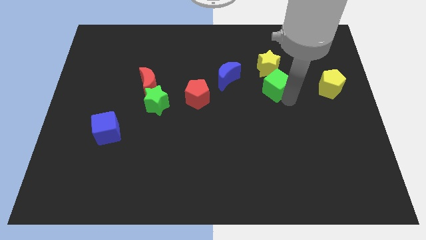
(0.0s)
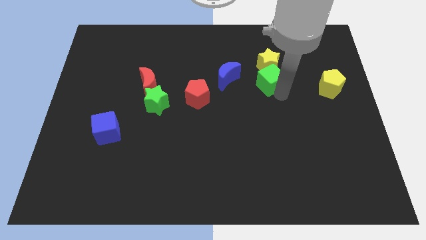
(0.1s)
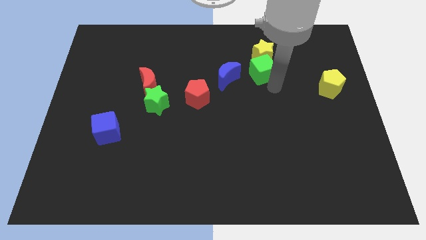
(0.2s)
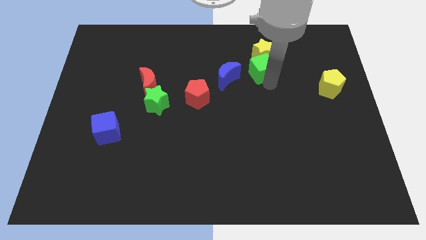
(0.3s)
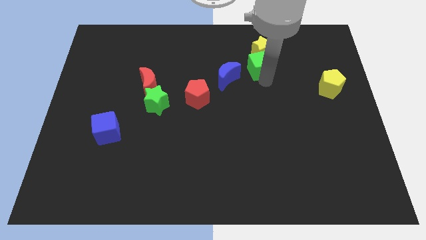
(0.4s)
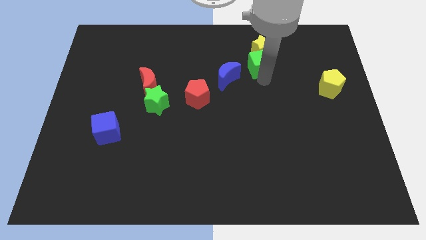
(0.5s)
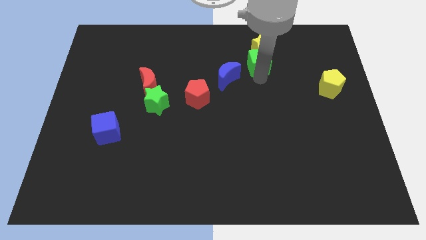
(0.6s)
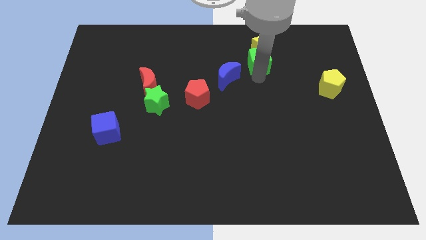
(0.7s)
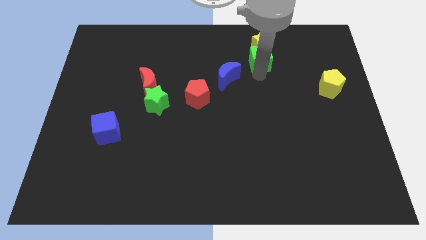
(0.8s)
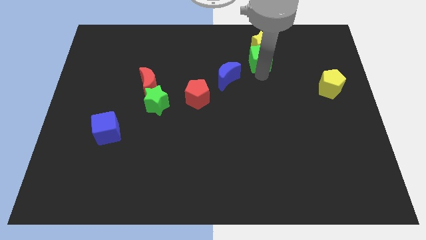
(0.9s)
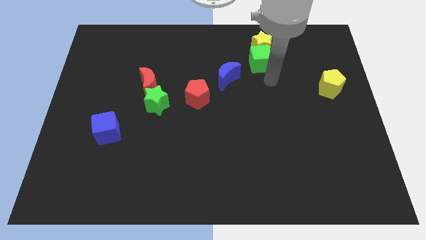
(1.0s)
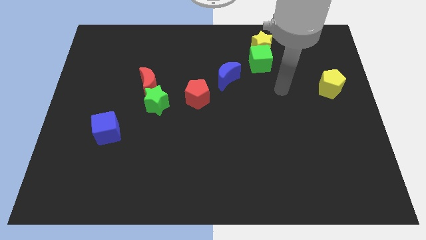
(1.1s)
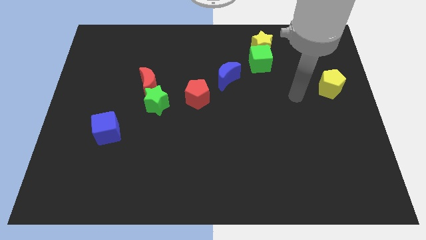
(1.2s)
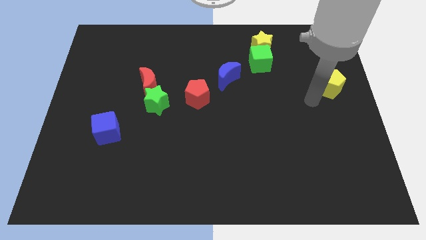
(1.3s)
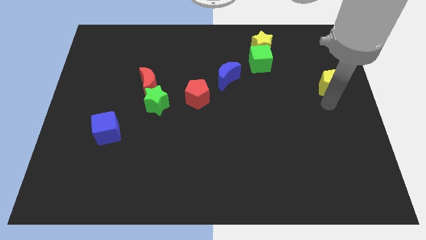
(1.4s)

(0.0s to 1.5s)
push the green cube and yellow star diagonally top right to the blue moon

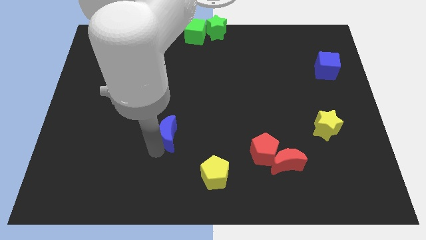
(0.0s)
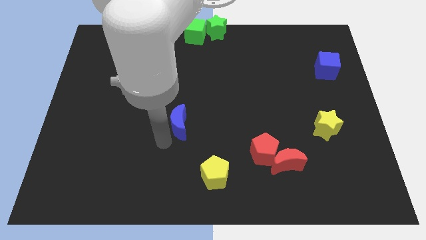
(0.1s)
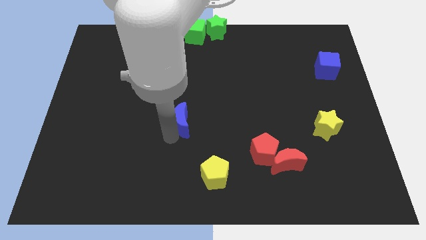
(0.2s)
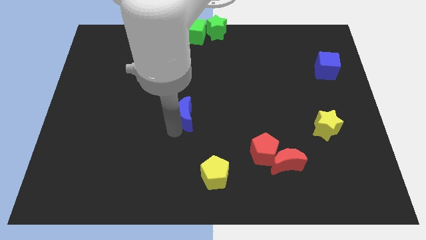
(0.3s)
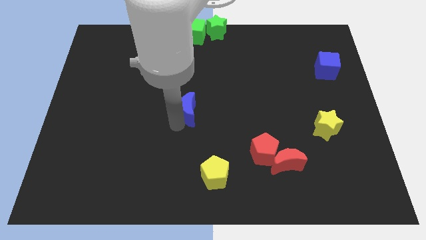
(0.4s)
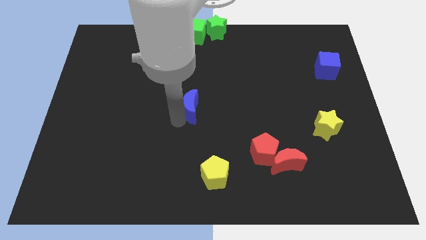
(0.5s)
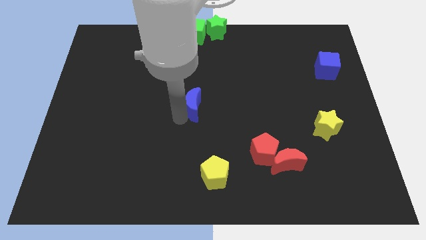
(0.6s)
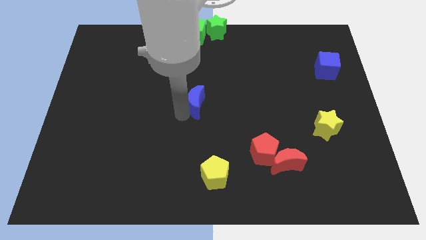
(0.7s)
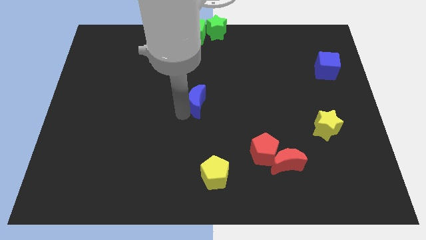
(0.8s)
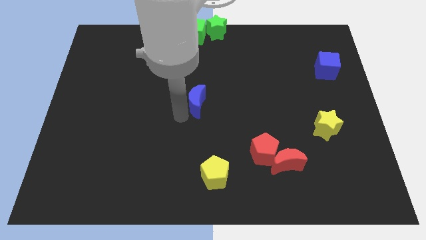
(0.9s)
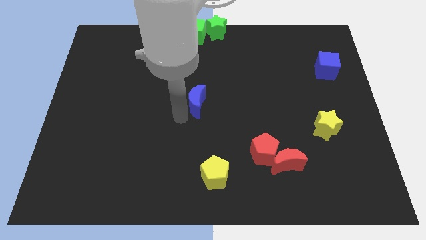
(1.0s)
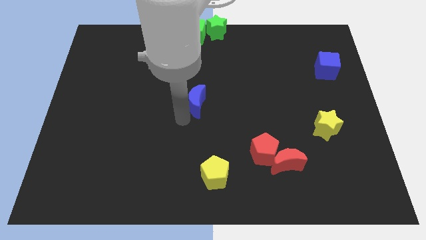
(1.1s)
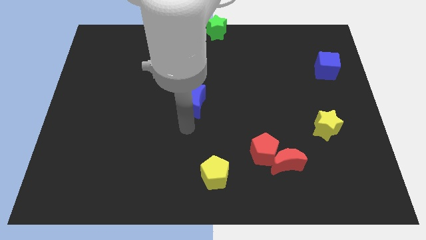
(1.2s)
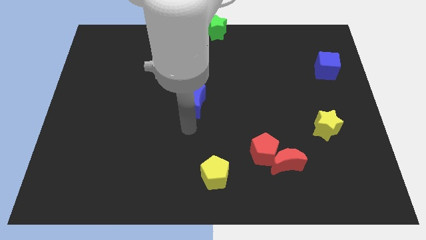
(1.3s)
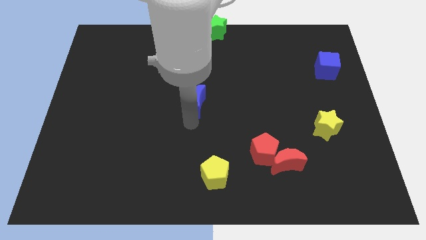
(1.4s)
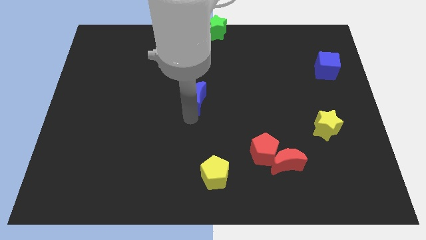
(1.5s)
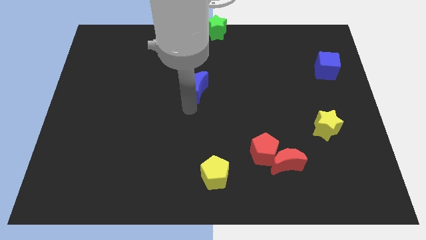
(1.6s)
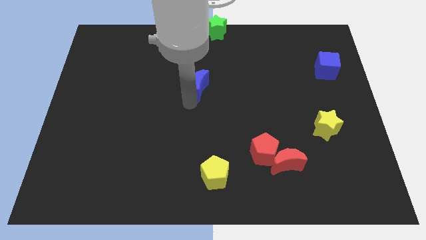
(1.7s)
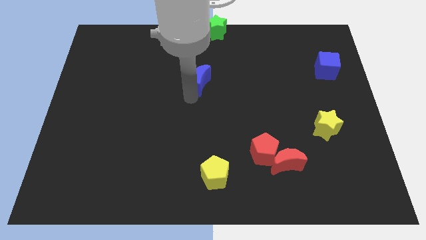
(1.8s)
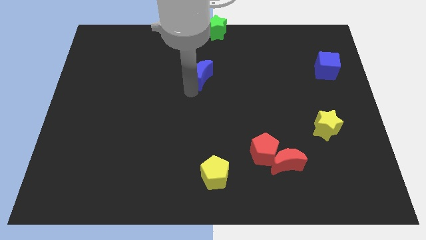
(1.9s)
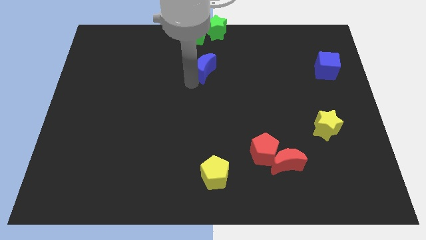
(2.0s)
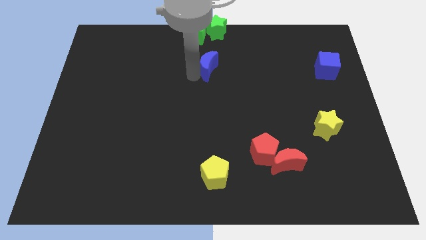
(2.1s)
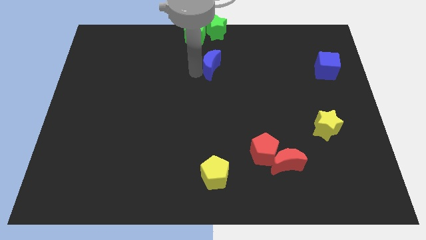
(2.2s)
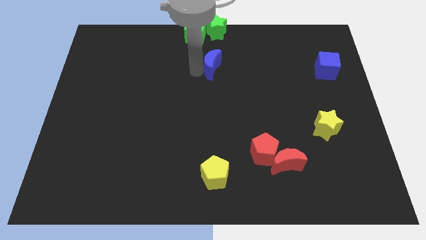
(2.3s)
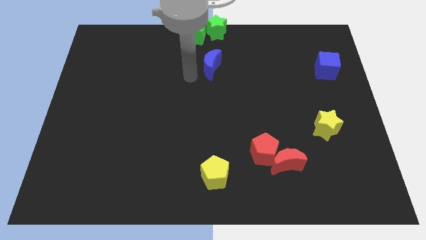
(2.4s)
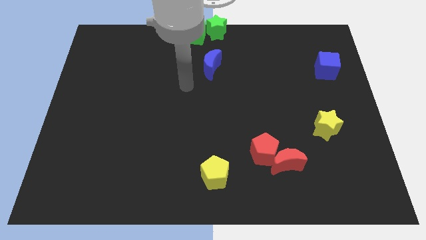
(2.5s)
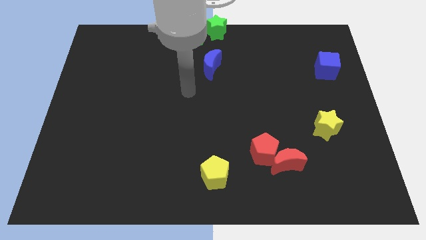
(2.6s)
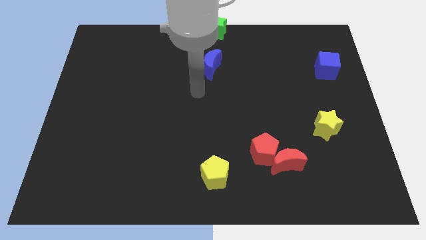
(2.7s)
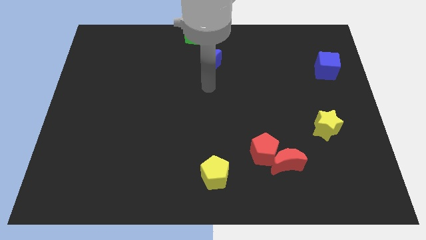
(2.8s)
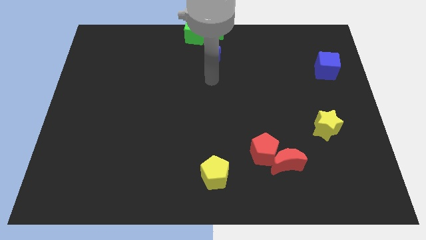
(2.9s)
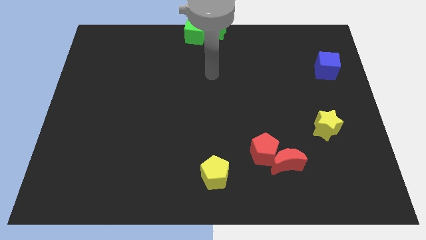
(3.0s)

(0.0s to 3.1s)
push the blue crescent to the bottom of the green star

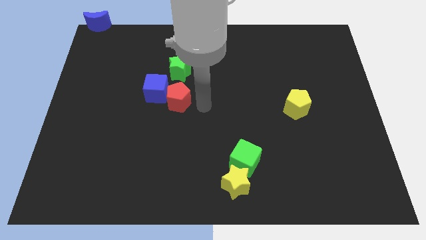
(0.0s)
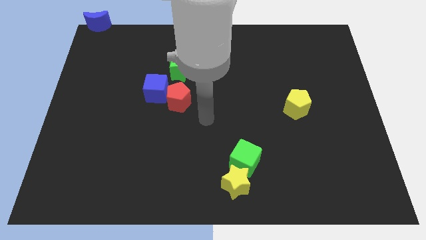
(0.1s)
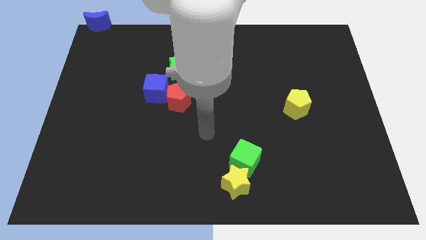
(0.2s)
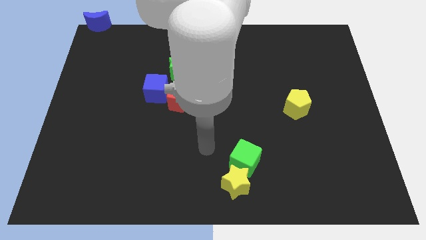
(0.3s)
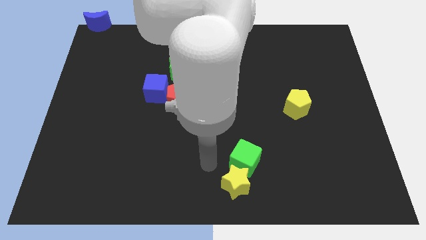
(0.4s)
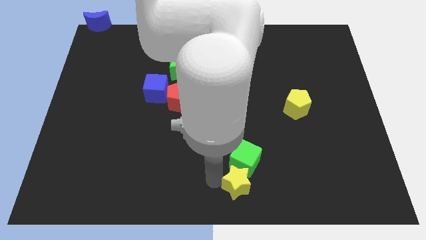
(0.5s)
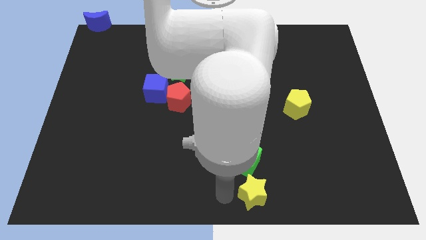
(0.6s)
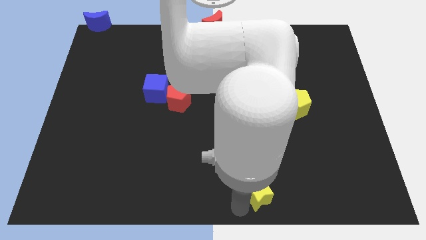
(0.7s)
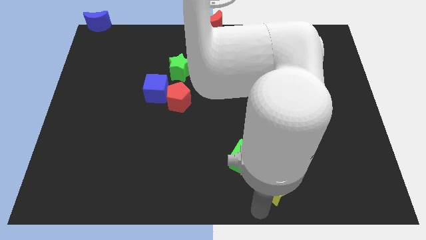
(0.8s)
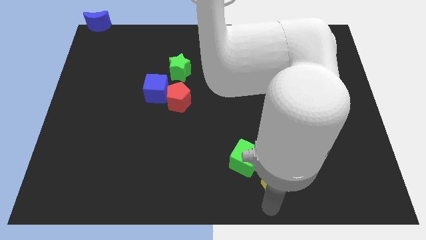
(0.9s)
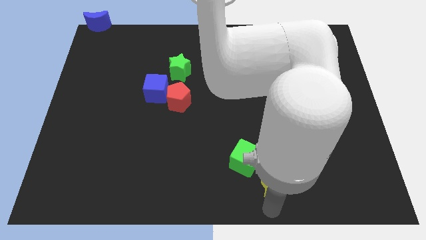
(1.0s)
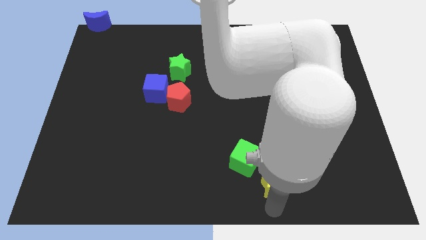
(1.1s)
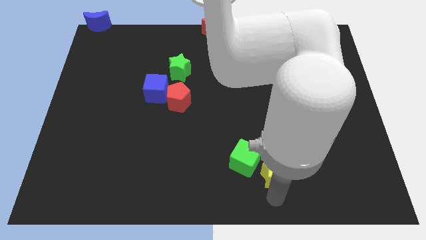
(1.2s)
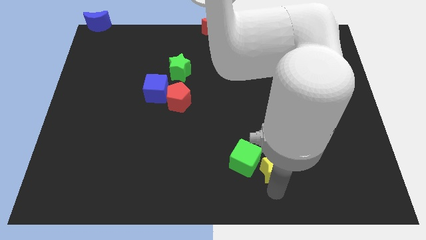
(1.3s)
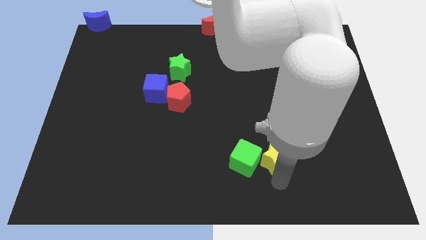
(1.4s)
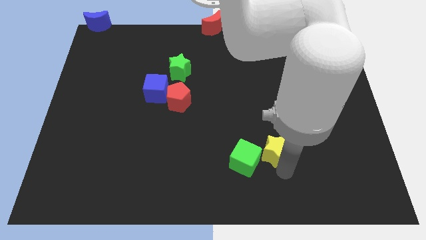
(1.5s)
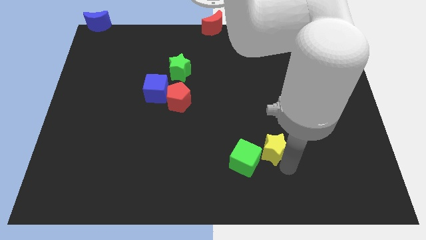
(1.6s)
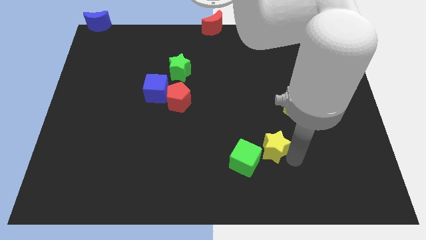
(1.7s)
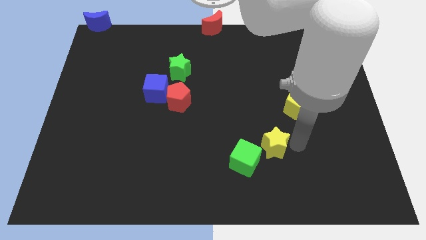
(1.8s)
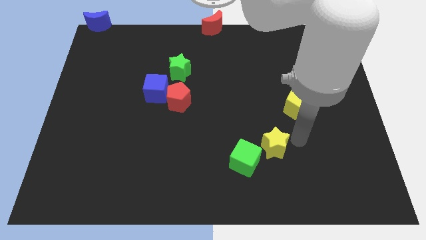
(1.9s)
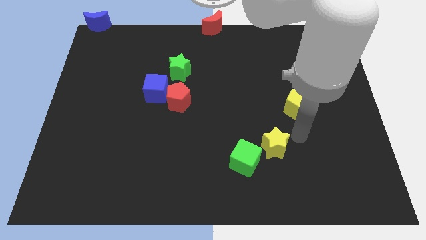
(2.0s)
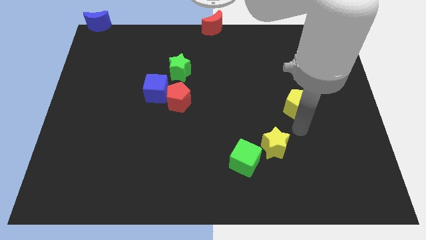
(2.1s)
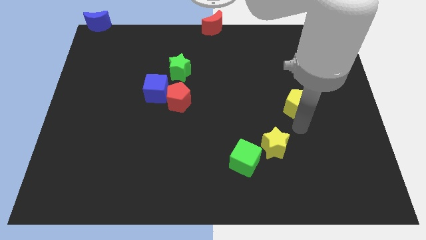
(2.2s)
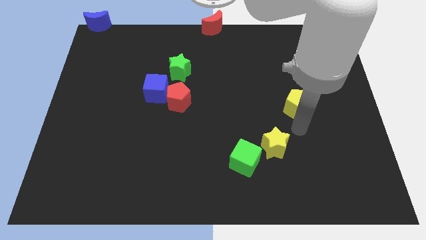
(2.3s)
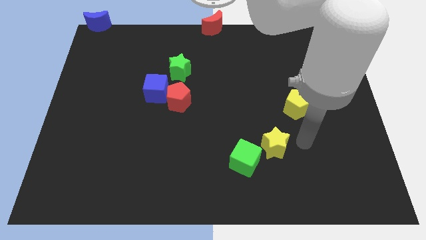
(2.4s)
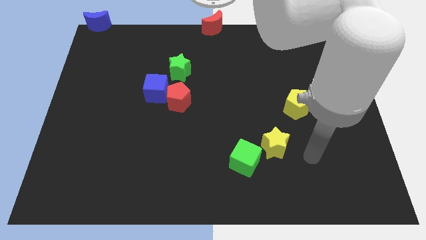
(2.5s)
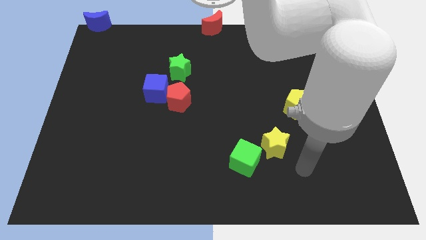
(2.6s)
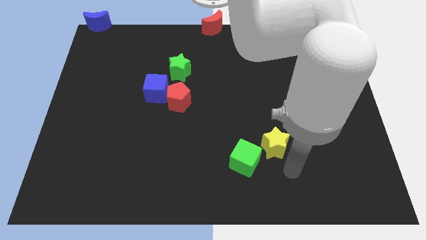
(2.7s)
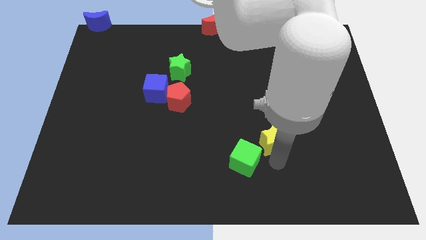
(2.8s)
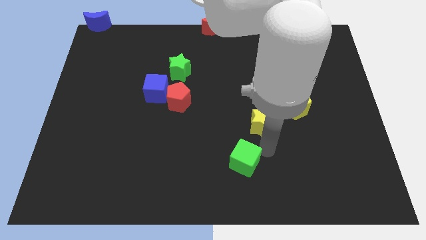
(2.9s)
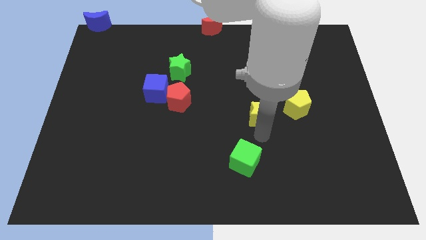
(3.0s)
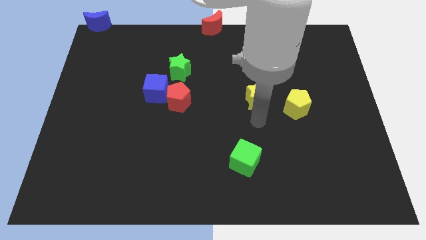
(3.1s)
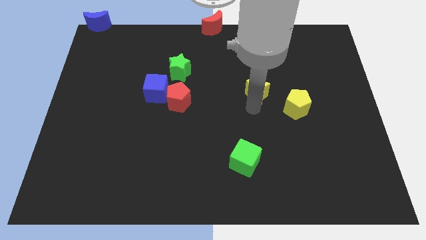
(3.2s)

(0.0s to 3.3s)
move the yellow star diagonal to the left of yellow pentagon

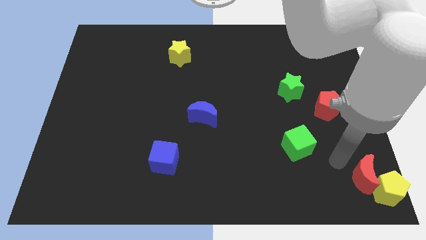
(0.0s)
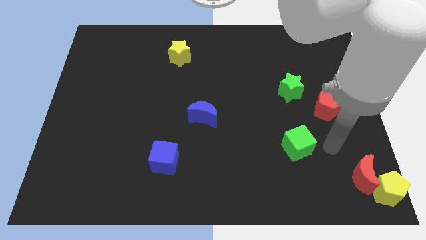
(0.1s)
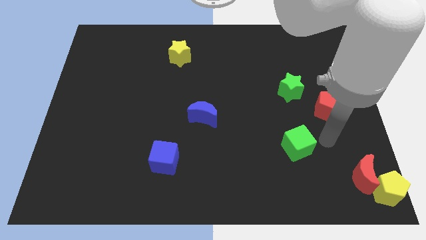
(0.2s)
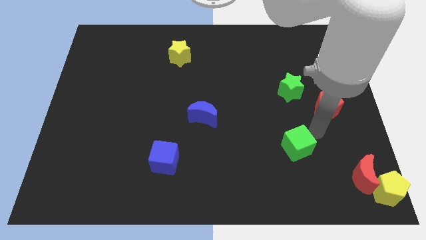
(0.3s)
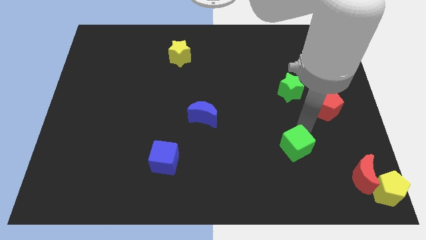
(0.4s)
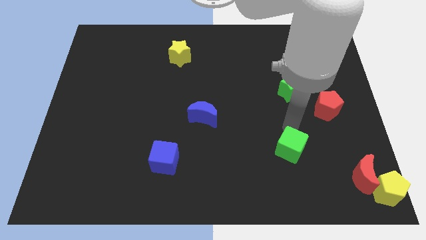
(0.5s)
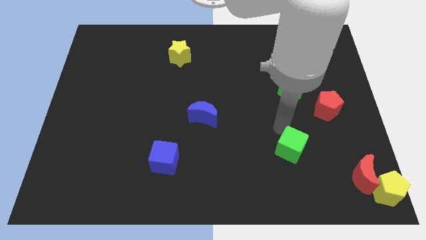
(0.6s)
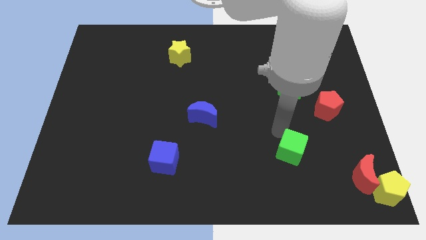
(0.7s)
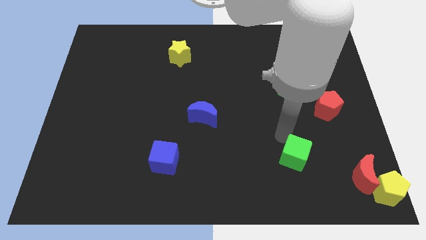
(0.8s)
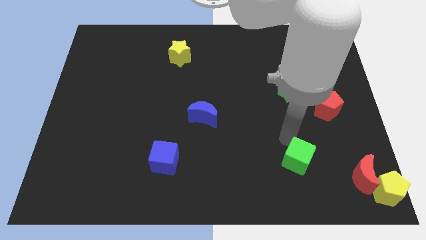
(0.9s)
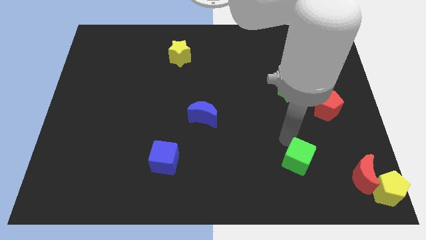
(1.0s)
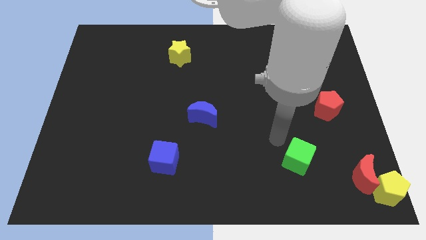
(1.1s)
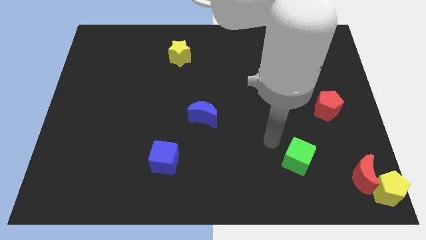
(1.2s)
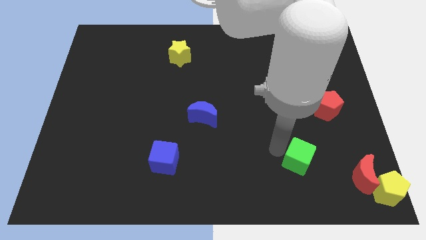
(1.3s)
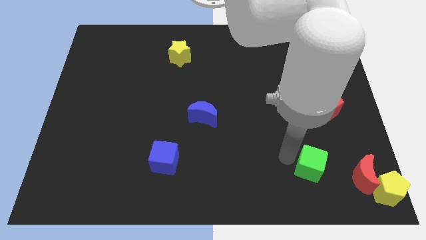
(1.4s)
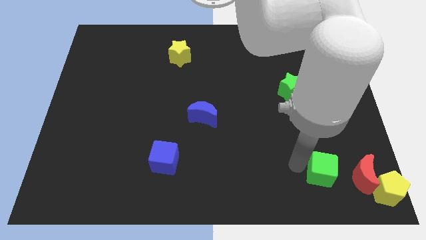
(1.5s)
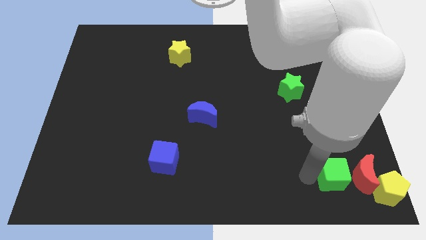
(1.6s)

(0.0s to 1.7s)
push the green cube to the left of the red crescent
